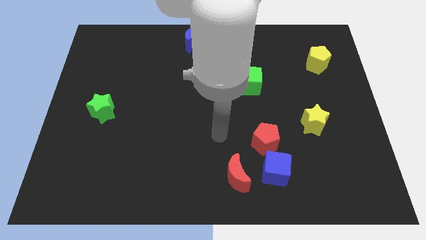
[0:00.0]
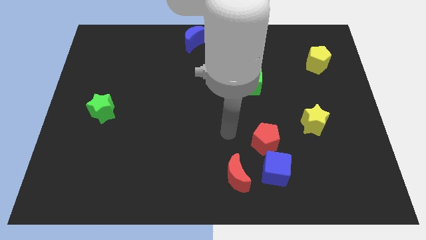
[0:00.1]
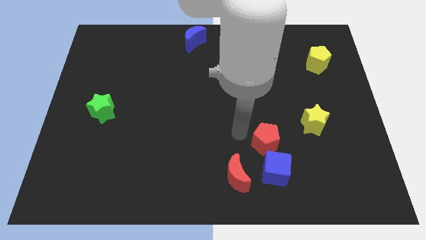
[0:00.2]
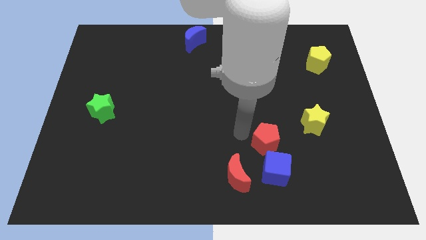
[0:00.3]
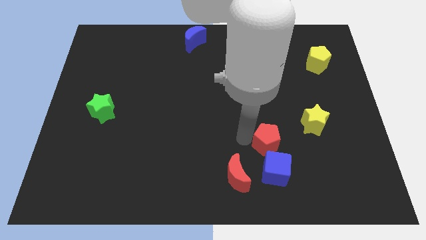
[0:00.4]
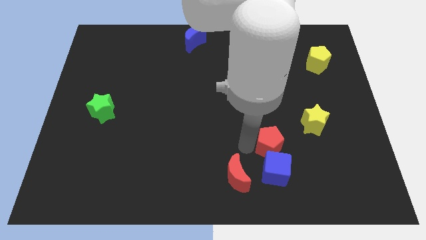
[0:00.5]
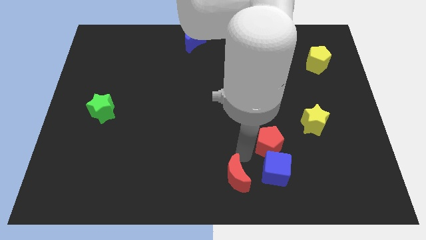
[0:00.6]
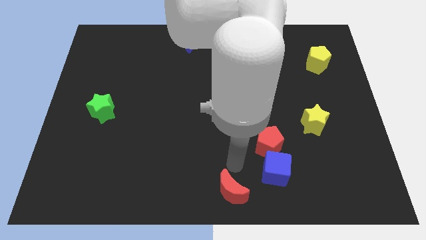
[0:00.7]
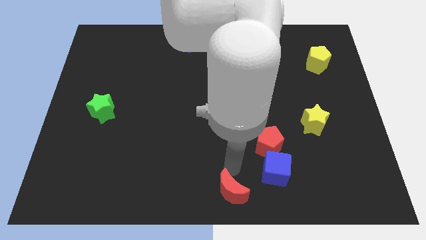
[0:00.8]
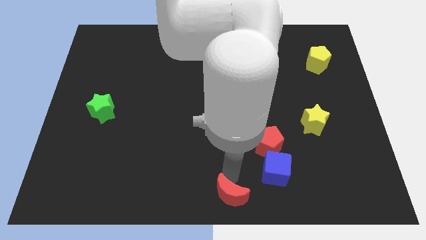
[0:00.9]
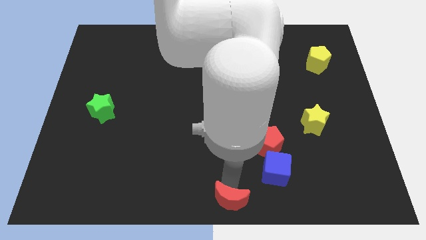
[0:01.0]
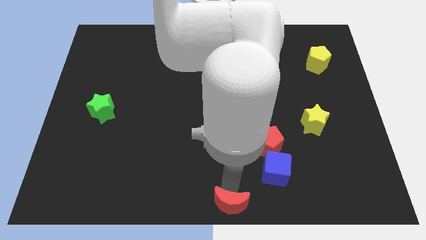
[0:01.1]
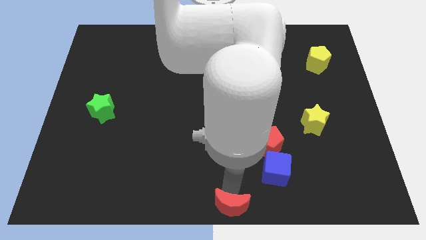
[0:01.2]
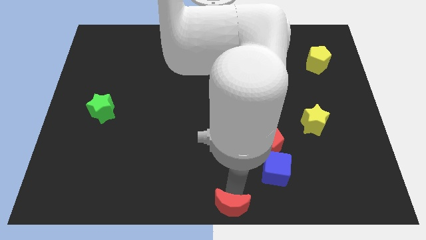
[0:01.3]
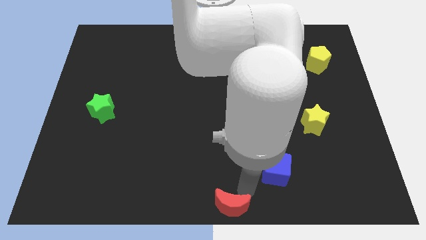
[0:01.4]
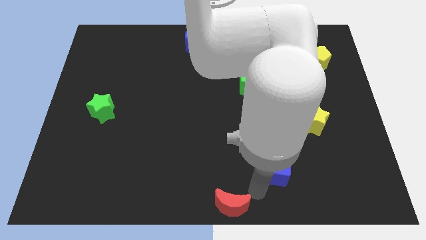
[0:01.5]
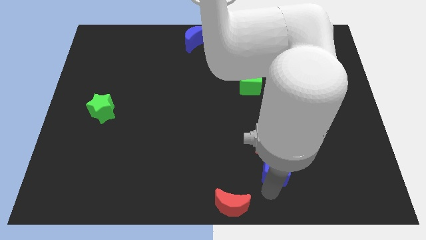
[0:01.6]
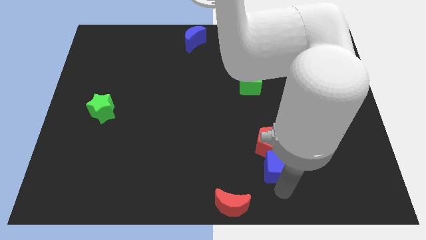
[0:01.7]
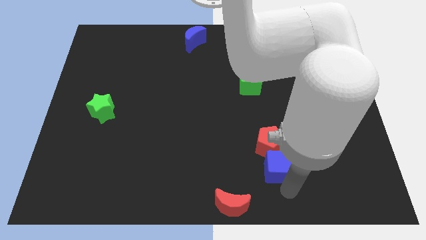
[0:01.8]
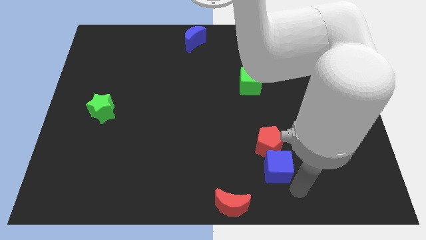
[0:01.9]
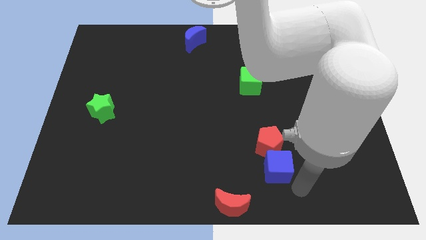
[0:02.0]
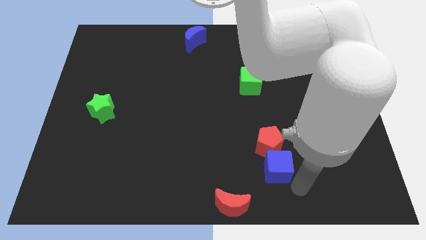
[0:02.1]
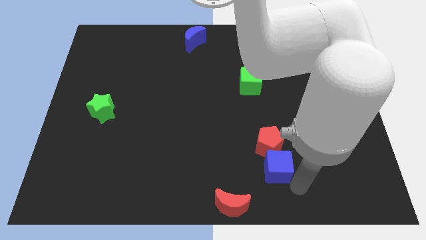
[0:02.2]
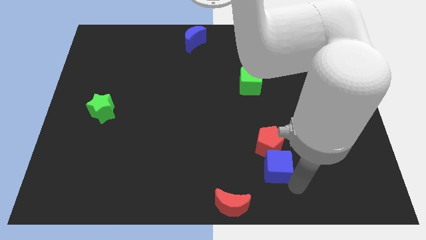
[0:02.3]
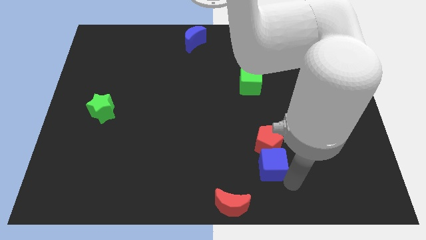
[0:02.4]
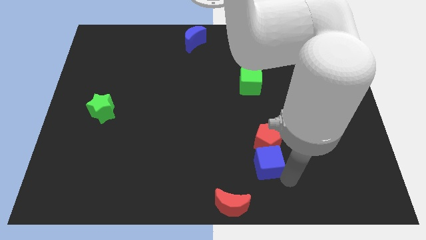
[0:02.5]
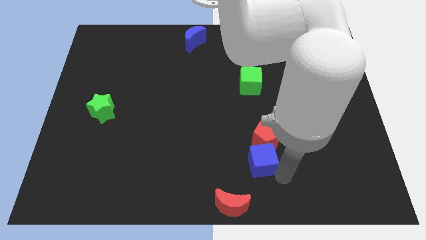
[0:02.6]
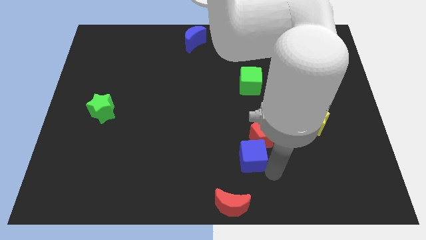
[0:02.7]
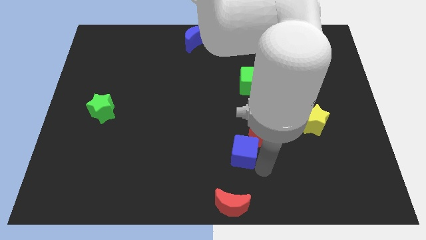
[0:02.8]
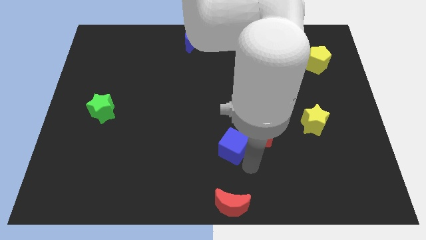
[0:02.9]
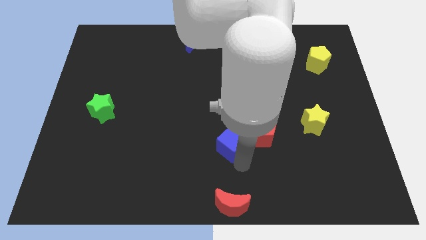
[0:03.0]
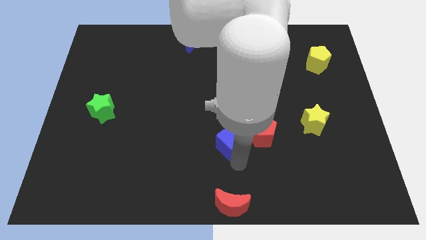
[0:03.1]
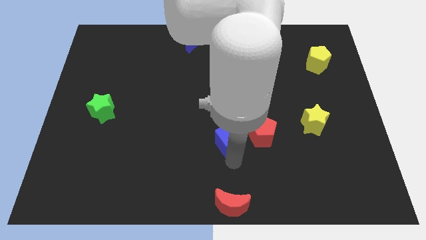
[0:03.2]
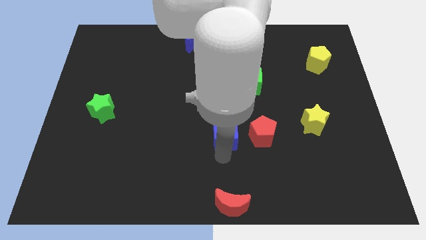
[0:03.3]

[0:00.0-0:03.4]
push blue cube beside red pentagon

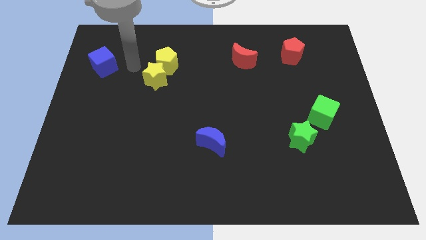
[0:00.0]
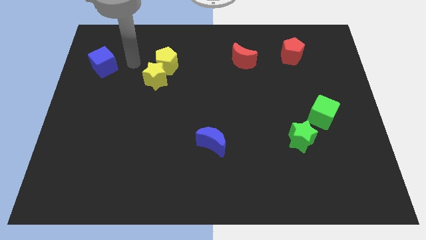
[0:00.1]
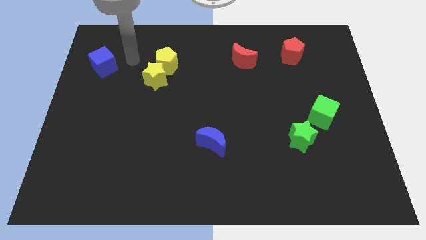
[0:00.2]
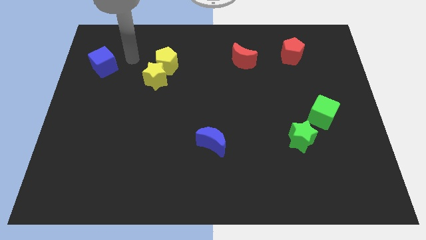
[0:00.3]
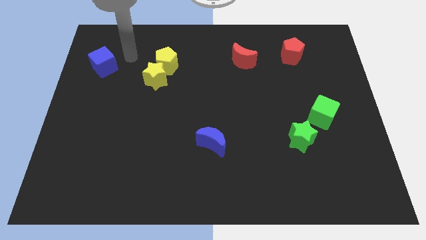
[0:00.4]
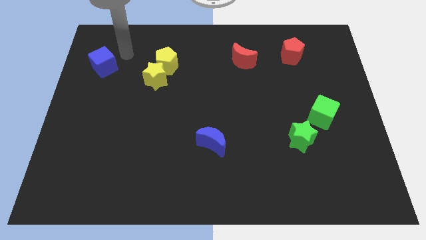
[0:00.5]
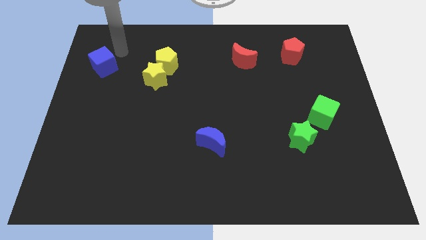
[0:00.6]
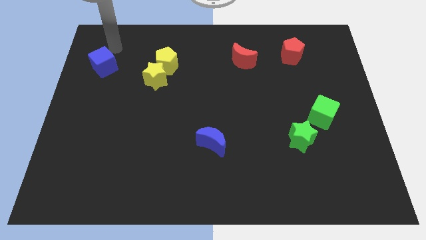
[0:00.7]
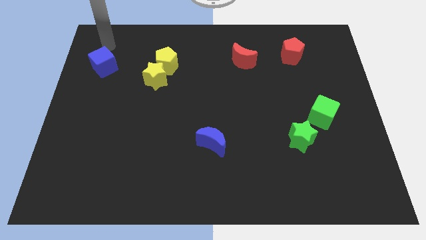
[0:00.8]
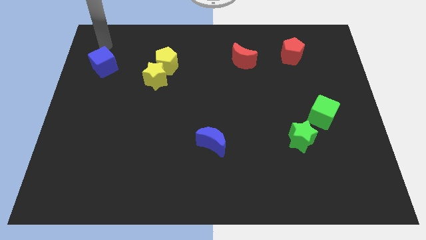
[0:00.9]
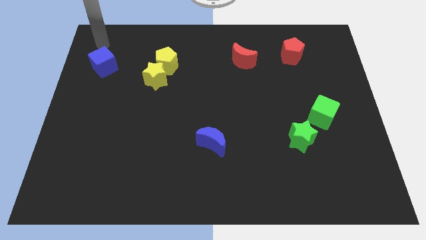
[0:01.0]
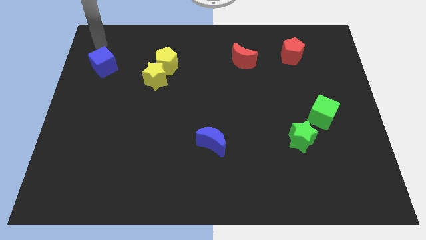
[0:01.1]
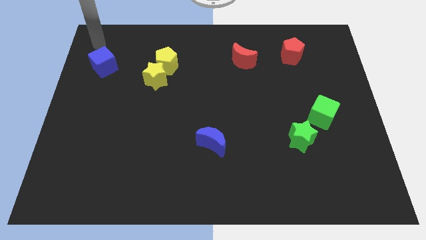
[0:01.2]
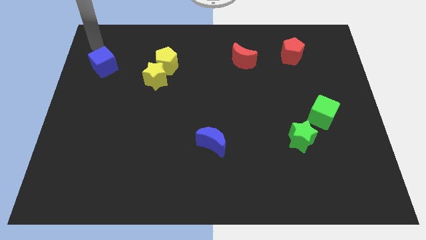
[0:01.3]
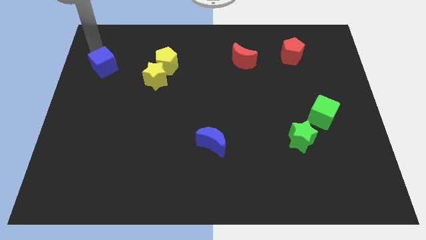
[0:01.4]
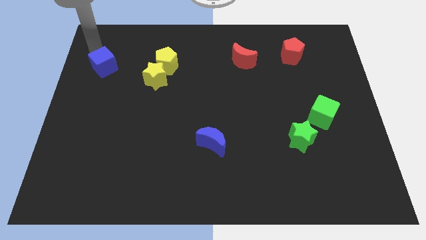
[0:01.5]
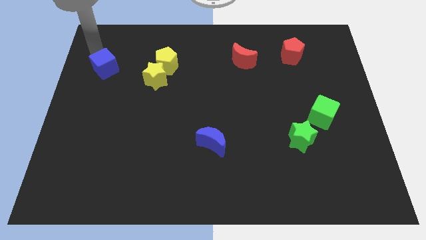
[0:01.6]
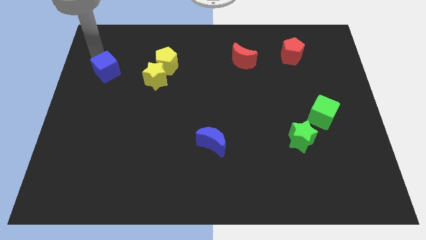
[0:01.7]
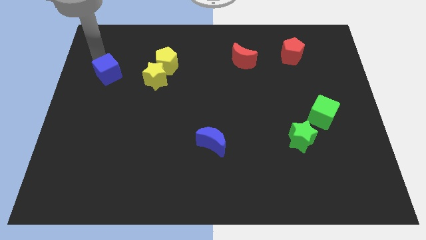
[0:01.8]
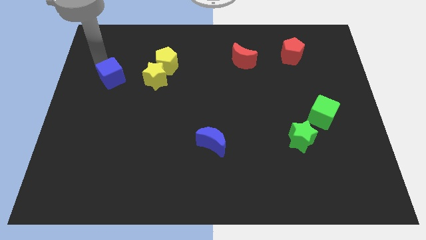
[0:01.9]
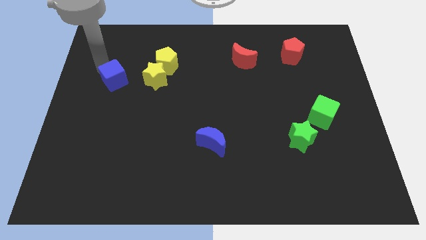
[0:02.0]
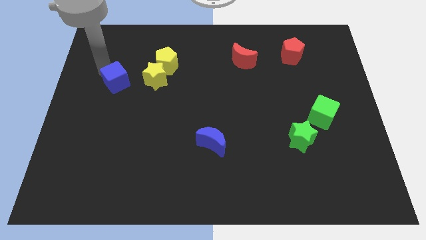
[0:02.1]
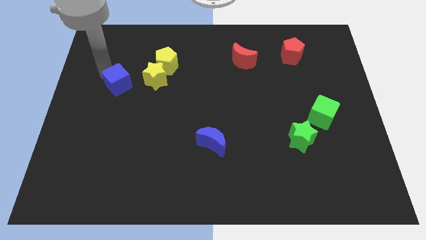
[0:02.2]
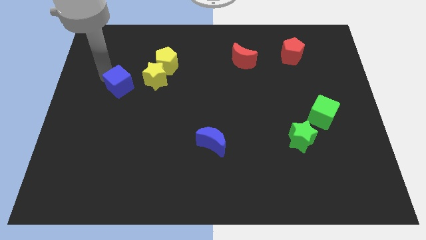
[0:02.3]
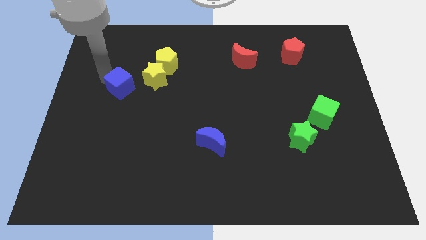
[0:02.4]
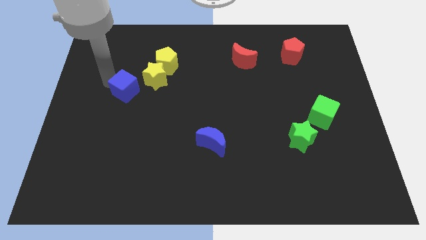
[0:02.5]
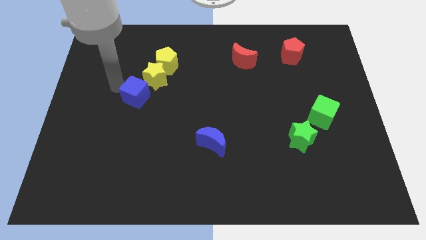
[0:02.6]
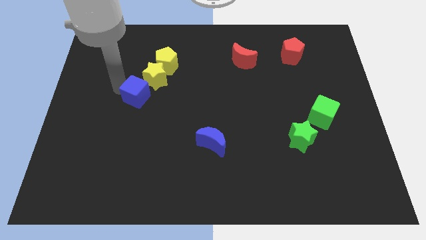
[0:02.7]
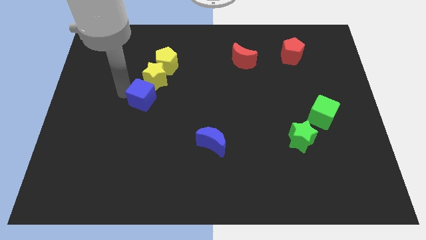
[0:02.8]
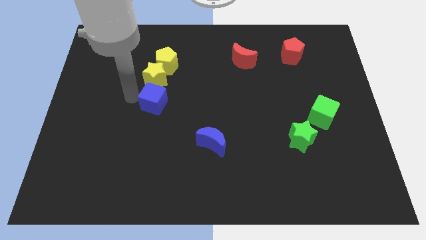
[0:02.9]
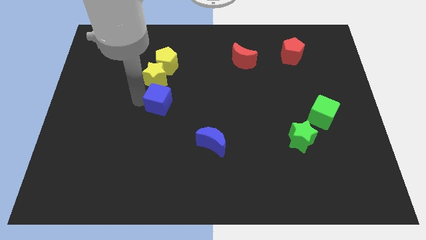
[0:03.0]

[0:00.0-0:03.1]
place the blue cube below the yellow star

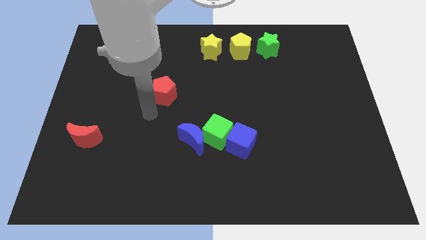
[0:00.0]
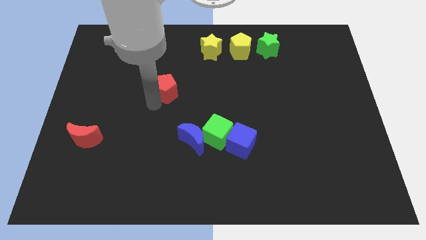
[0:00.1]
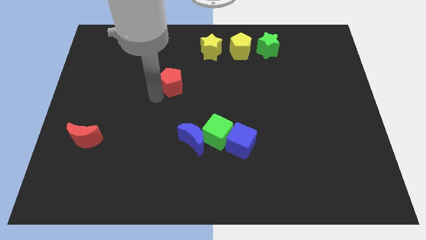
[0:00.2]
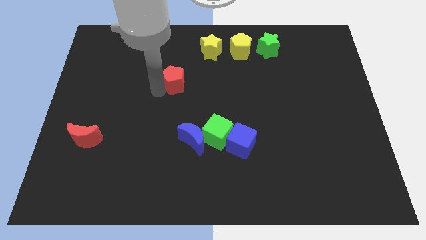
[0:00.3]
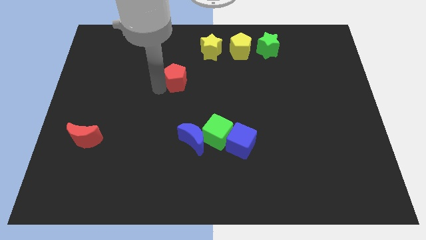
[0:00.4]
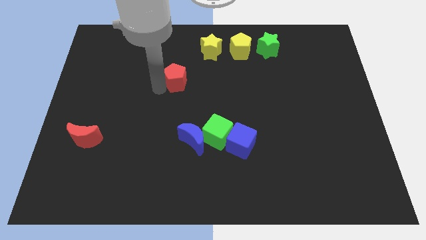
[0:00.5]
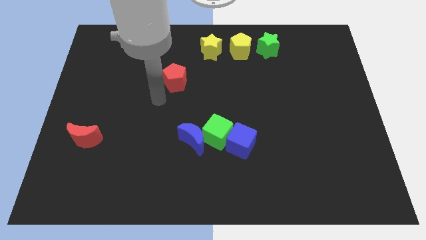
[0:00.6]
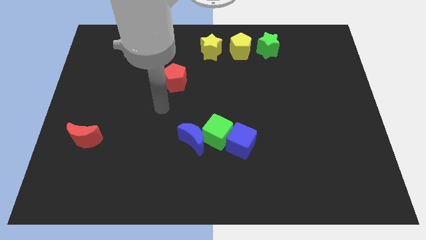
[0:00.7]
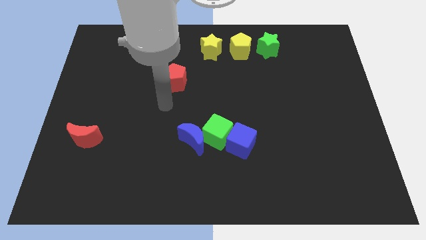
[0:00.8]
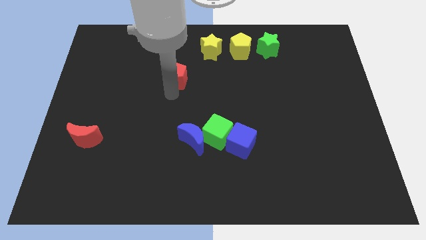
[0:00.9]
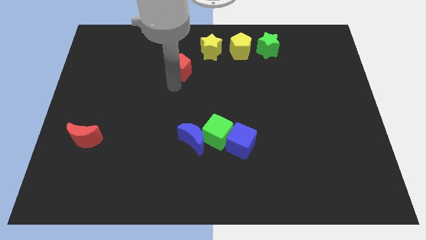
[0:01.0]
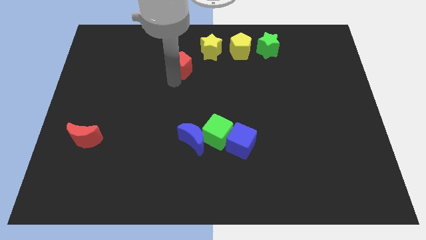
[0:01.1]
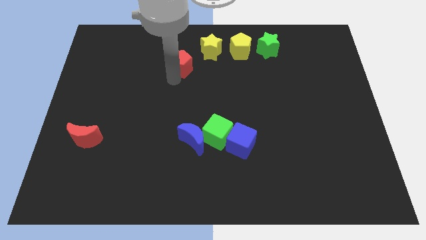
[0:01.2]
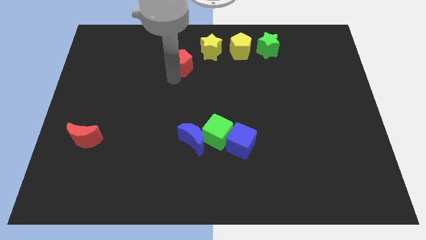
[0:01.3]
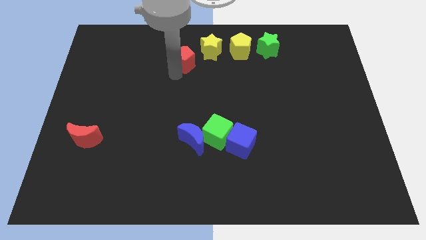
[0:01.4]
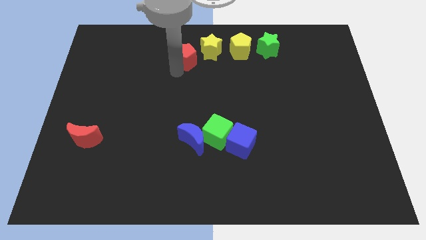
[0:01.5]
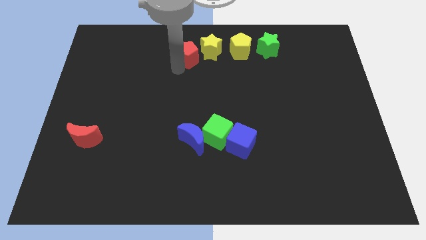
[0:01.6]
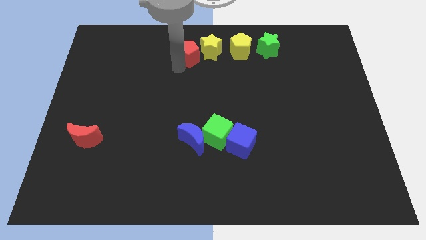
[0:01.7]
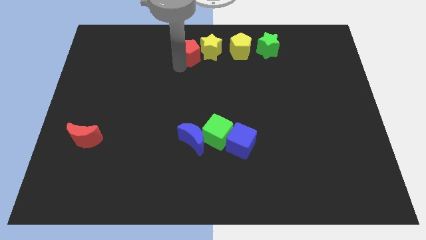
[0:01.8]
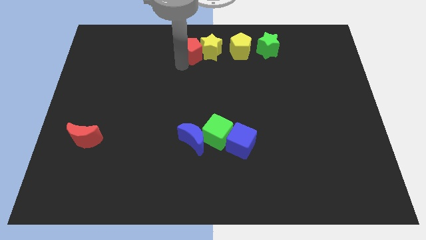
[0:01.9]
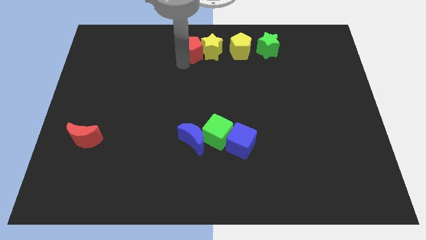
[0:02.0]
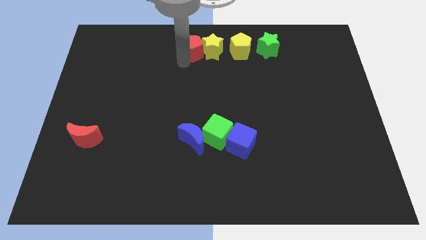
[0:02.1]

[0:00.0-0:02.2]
move the red pentagon into the left of the yellow star

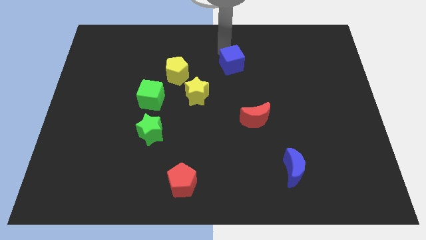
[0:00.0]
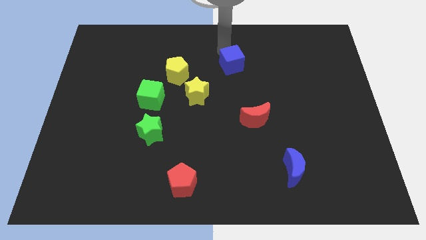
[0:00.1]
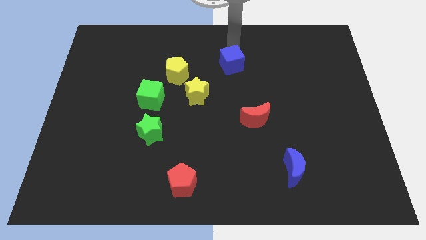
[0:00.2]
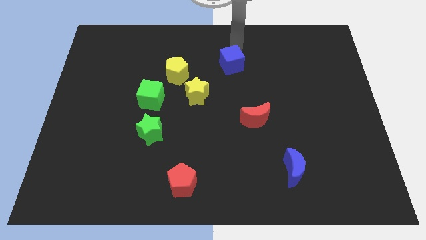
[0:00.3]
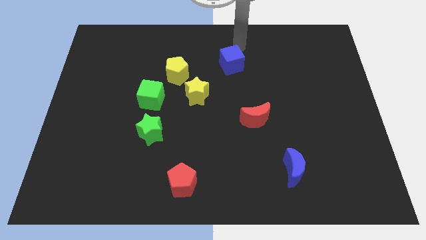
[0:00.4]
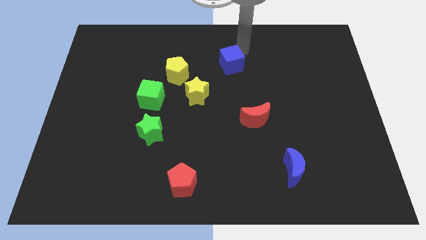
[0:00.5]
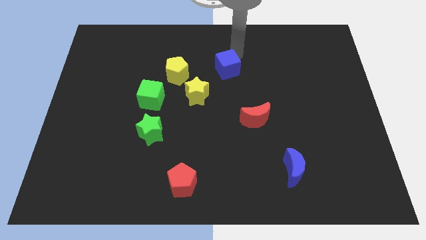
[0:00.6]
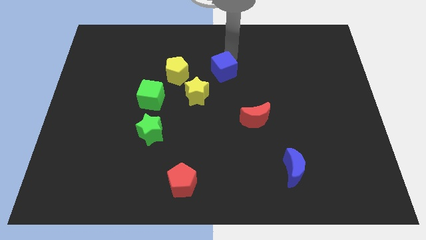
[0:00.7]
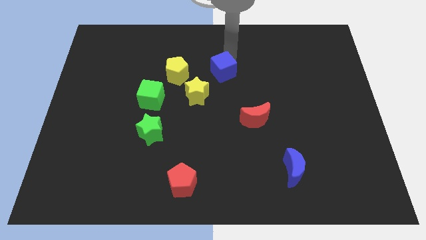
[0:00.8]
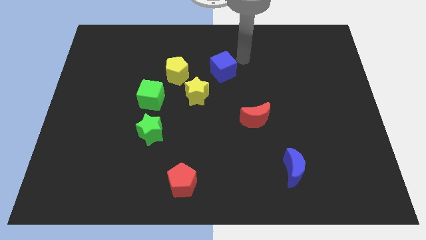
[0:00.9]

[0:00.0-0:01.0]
put the blue cube to the right of the yellow pentagon
